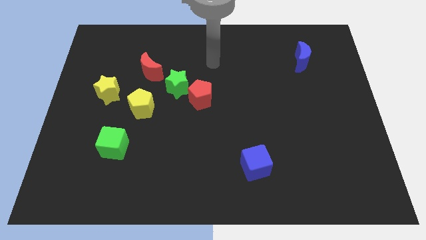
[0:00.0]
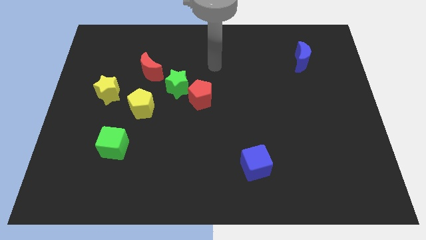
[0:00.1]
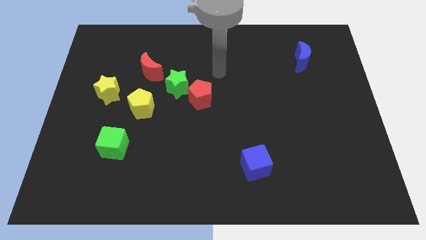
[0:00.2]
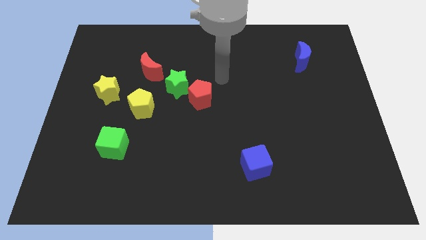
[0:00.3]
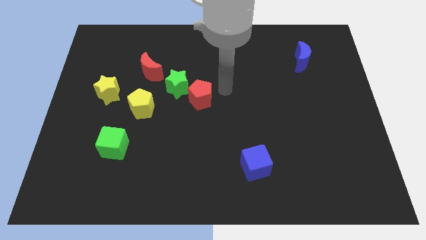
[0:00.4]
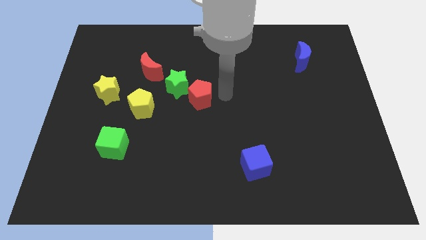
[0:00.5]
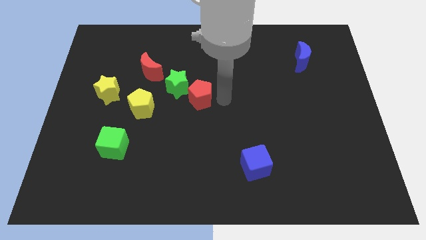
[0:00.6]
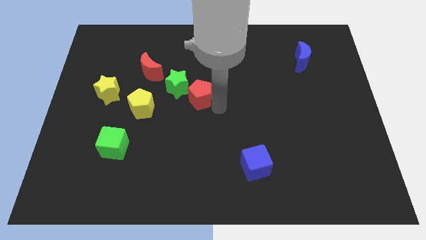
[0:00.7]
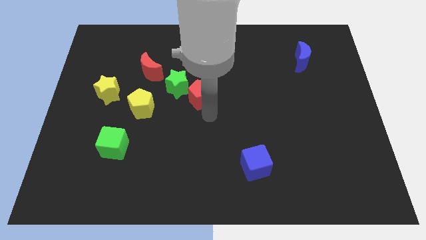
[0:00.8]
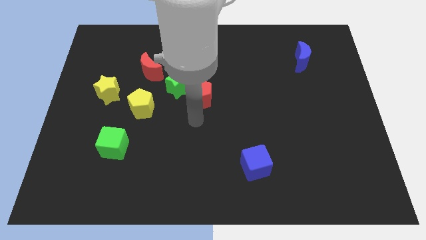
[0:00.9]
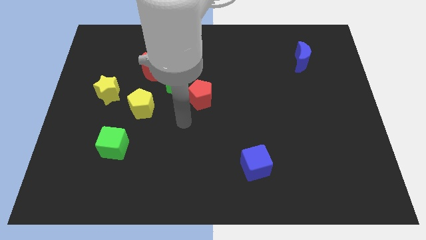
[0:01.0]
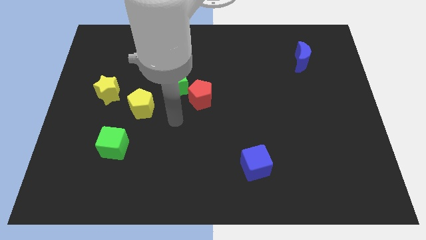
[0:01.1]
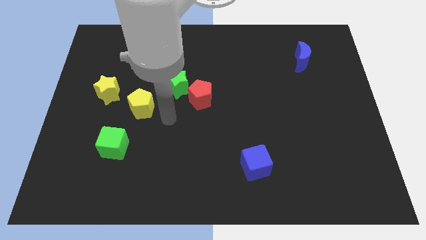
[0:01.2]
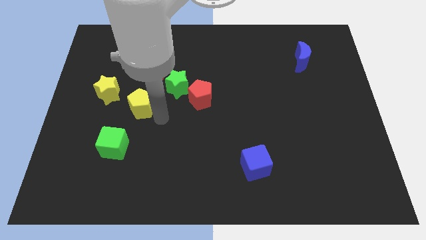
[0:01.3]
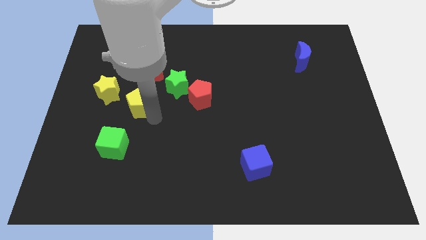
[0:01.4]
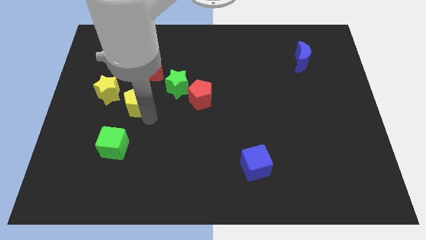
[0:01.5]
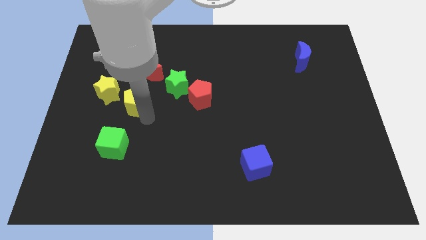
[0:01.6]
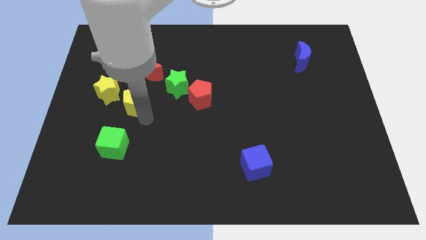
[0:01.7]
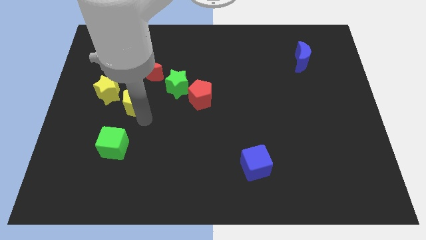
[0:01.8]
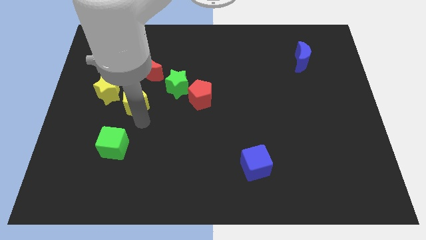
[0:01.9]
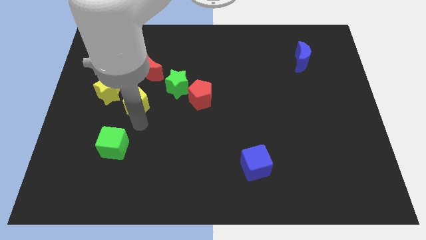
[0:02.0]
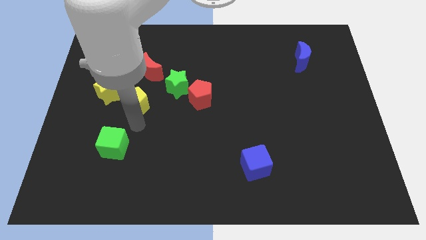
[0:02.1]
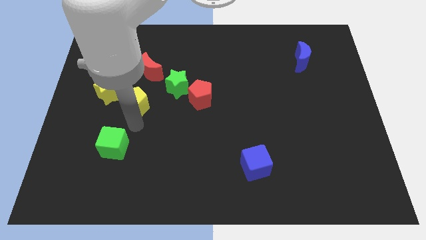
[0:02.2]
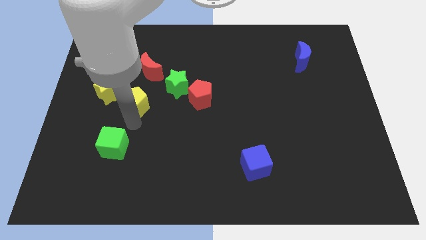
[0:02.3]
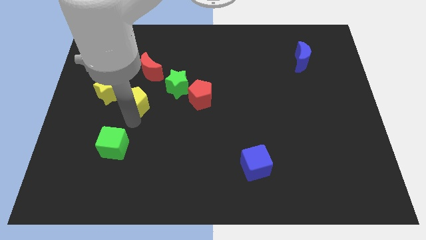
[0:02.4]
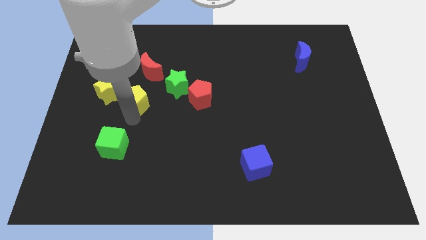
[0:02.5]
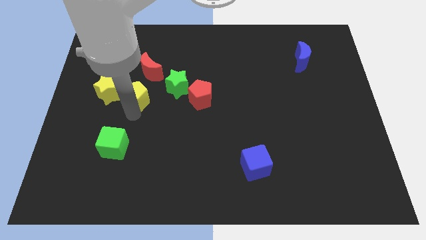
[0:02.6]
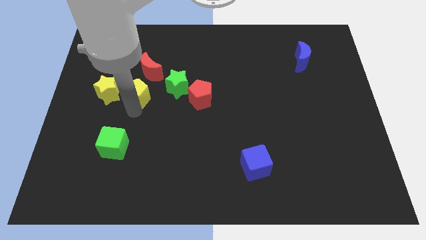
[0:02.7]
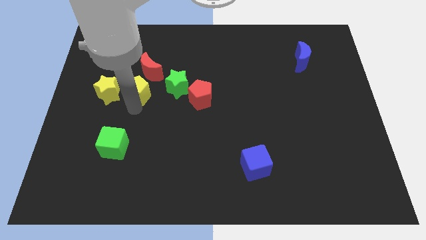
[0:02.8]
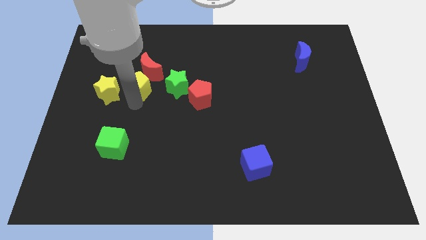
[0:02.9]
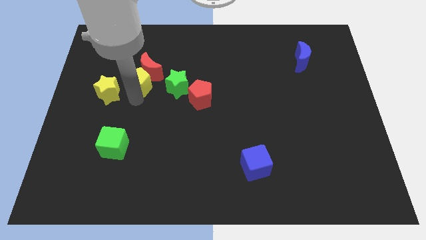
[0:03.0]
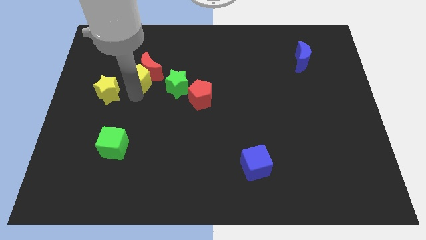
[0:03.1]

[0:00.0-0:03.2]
move the yellow pentagon to the red moon

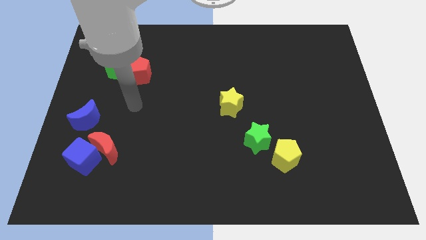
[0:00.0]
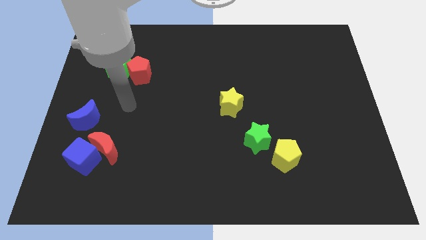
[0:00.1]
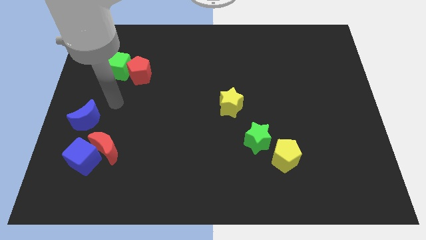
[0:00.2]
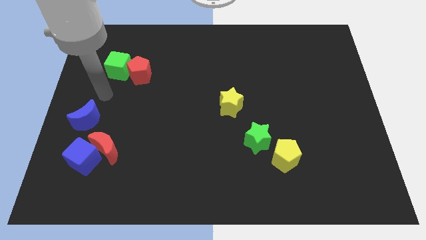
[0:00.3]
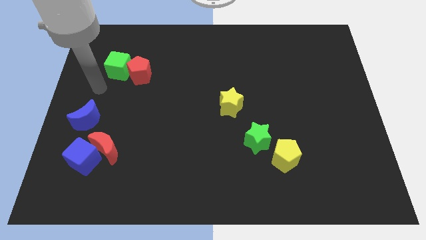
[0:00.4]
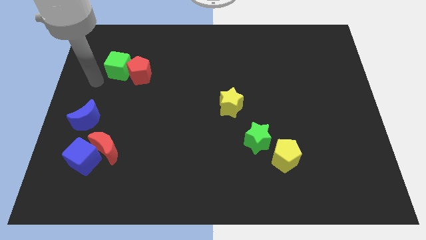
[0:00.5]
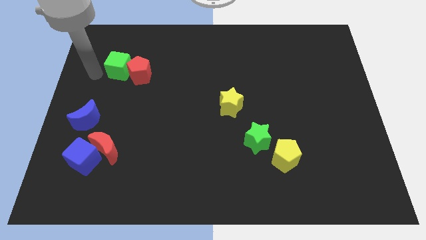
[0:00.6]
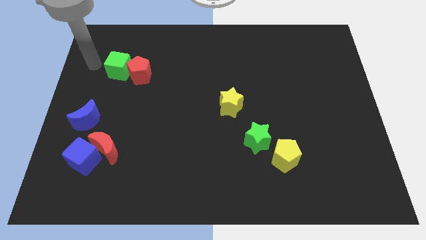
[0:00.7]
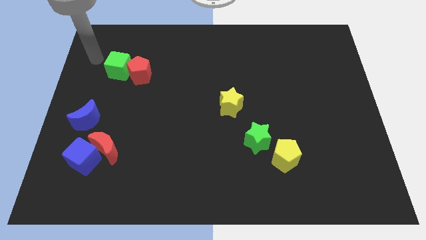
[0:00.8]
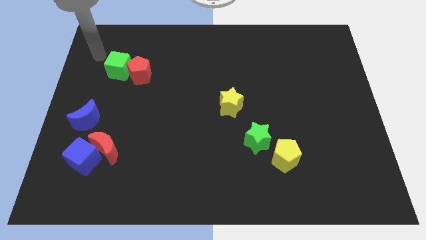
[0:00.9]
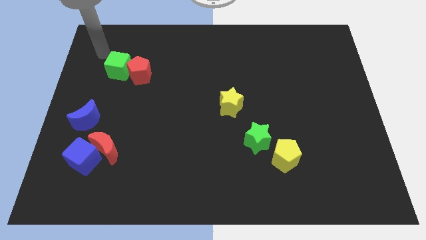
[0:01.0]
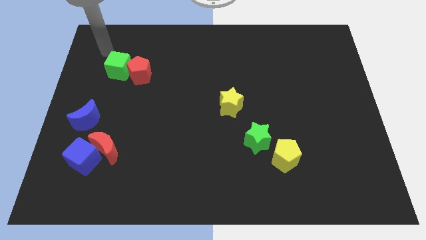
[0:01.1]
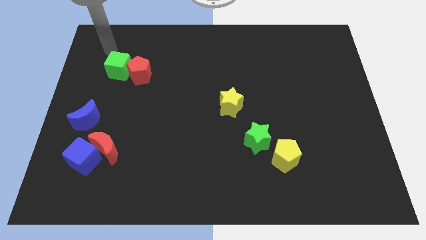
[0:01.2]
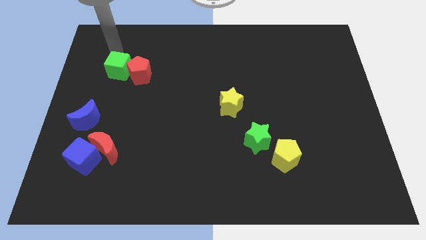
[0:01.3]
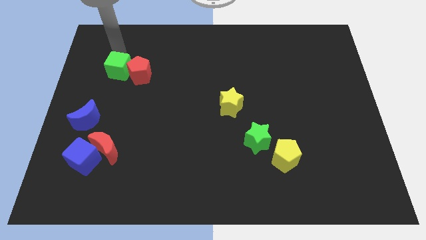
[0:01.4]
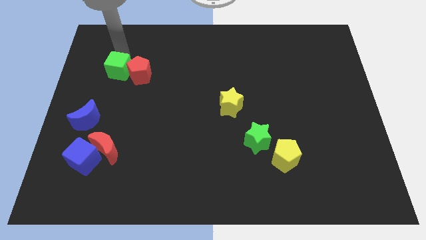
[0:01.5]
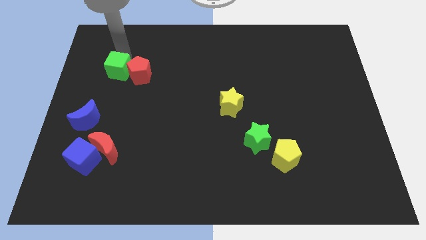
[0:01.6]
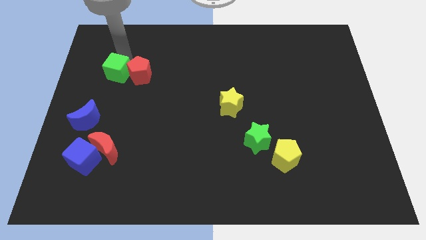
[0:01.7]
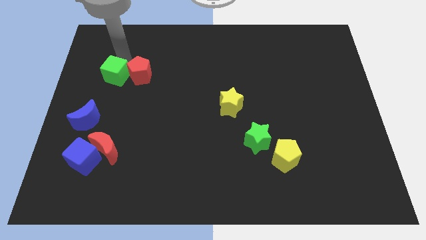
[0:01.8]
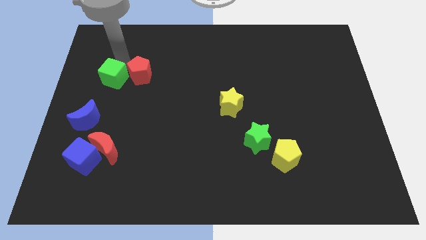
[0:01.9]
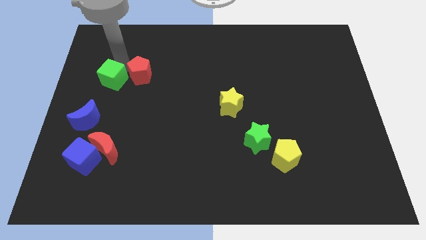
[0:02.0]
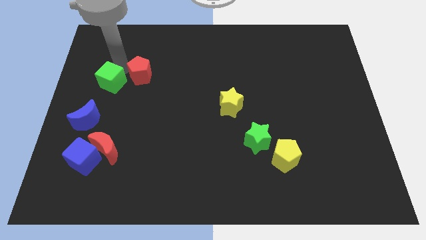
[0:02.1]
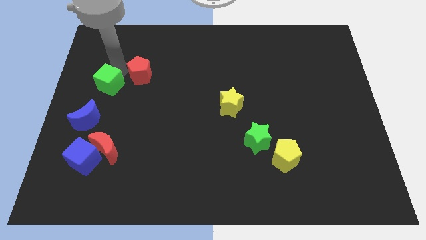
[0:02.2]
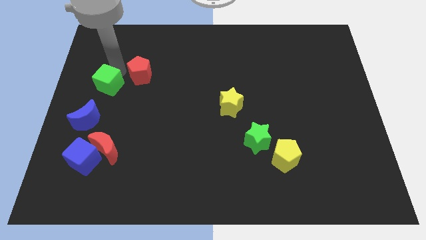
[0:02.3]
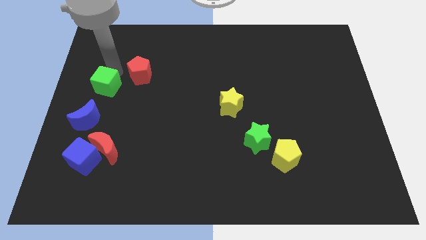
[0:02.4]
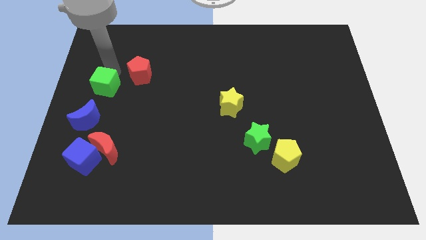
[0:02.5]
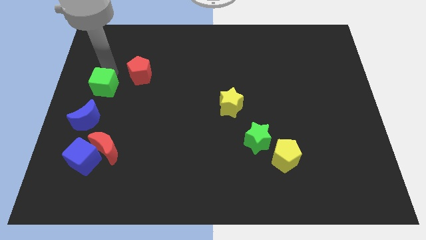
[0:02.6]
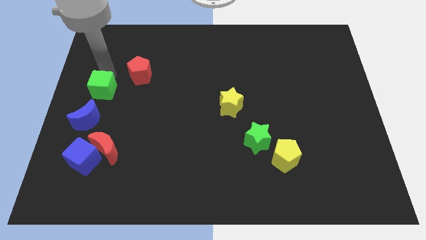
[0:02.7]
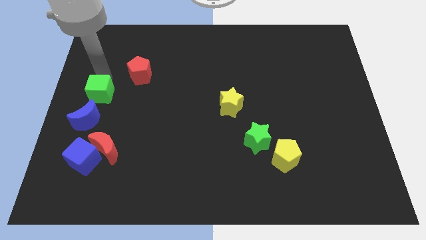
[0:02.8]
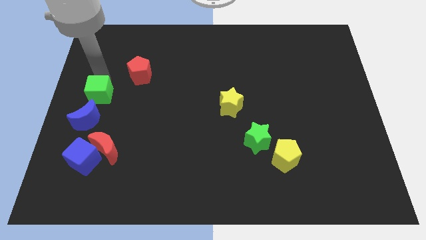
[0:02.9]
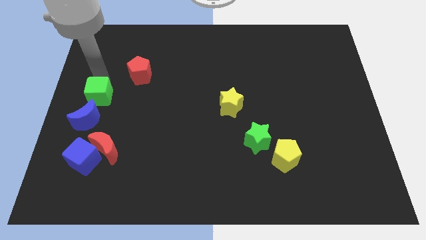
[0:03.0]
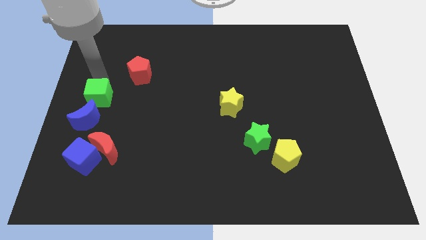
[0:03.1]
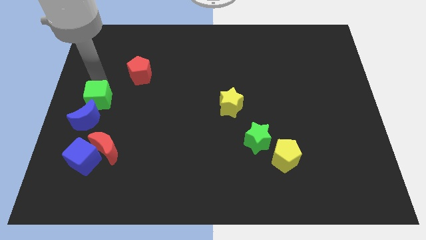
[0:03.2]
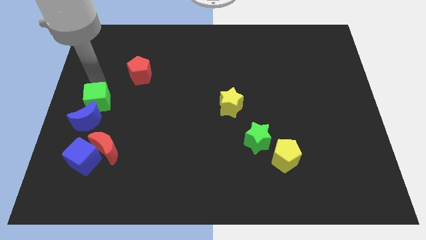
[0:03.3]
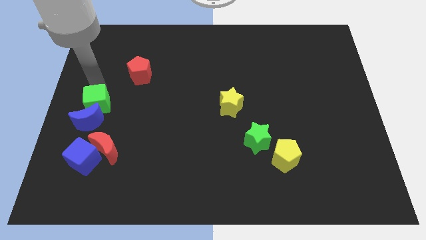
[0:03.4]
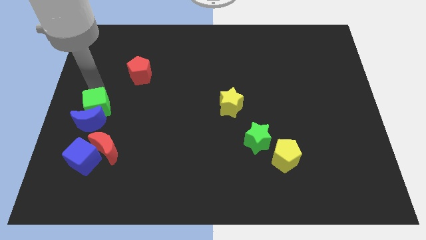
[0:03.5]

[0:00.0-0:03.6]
put the green cube towards the blue moon

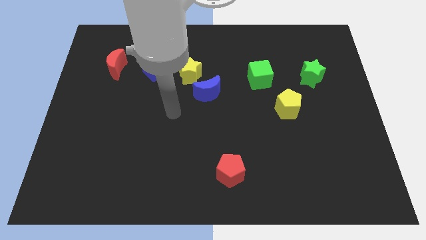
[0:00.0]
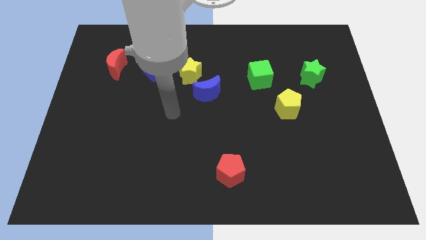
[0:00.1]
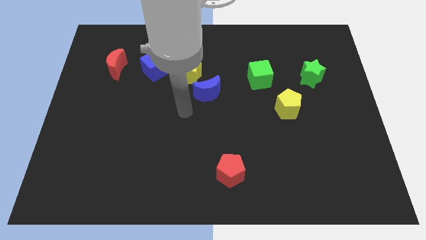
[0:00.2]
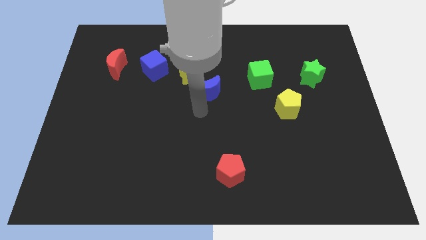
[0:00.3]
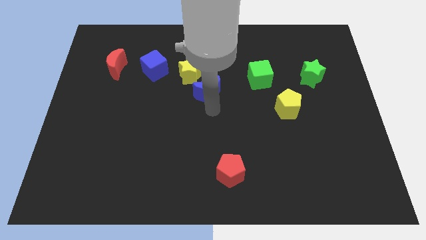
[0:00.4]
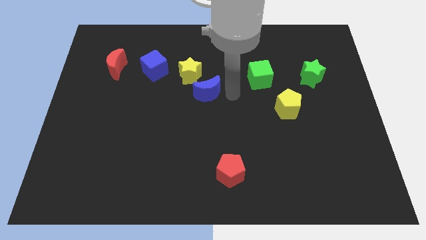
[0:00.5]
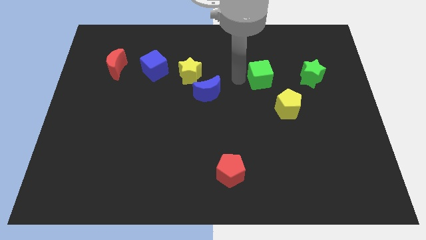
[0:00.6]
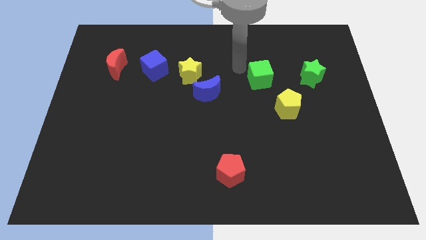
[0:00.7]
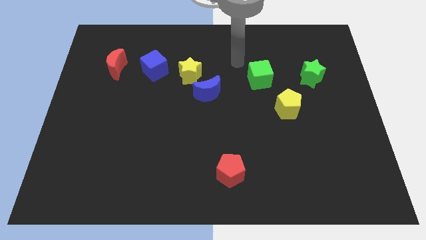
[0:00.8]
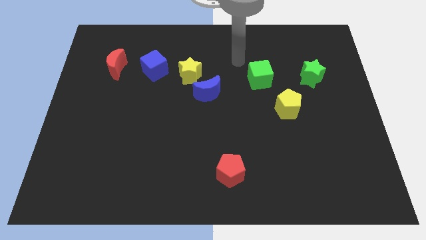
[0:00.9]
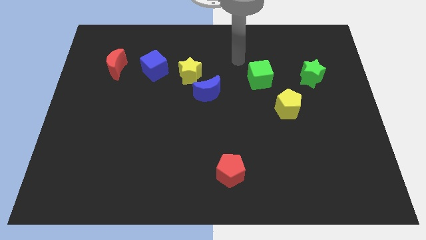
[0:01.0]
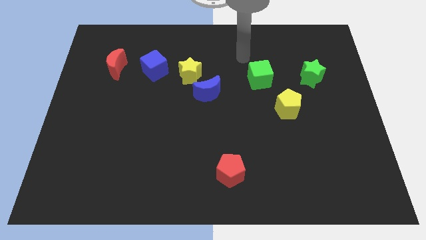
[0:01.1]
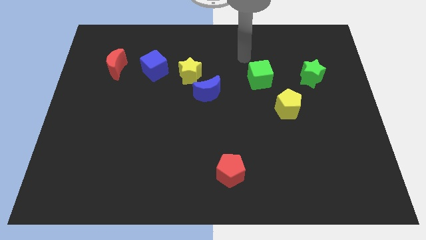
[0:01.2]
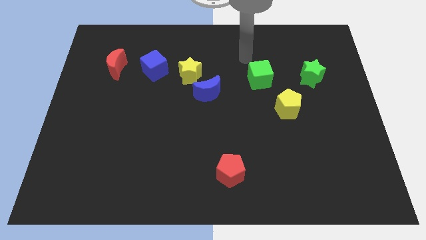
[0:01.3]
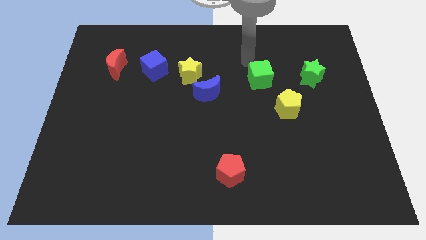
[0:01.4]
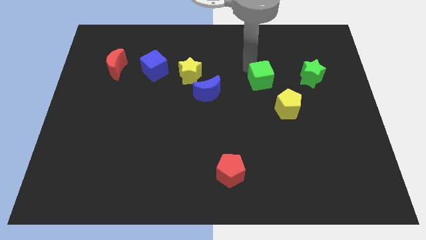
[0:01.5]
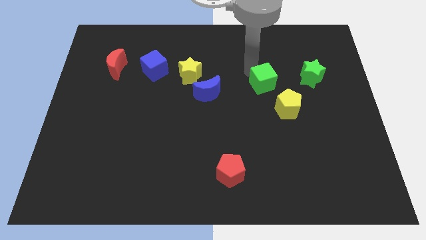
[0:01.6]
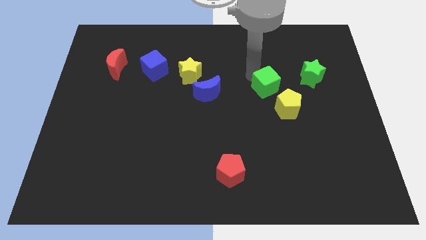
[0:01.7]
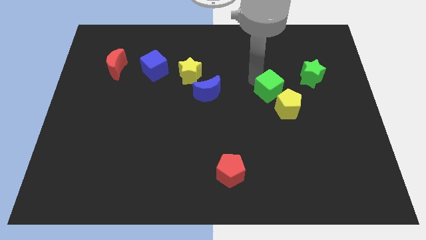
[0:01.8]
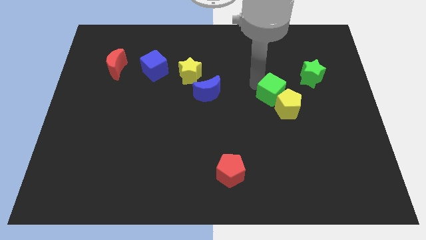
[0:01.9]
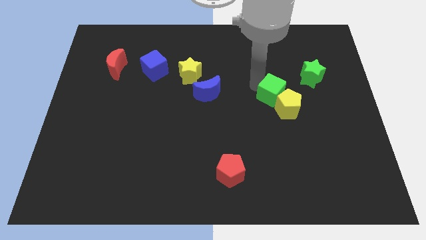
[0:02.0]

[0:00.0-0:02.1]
push the green cube next to the yellow pentagon
